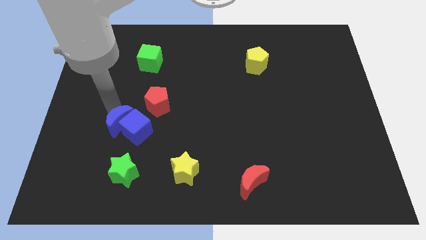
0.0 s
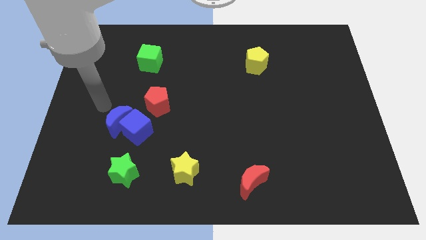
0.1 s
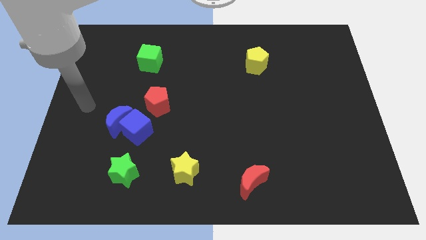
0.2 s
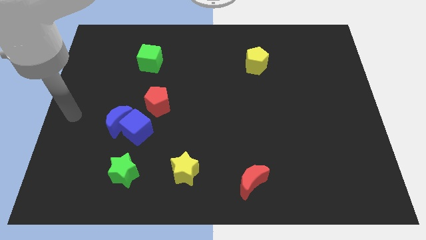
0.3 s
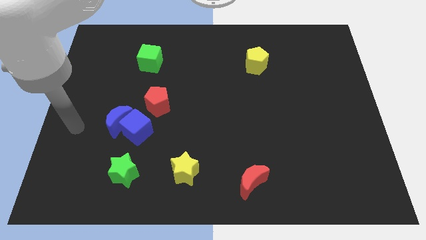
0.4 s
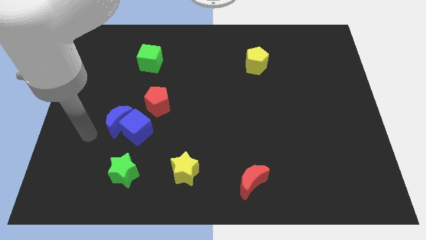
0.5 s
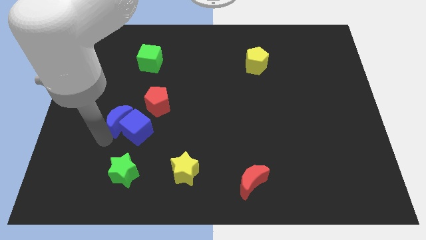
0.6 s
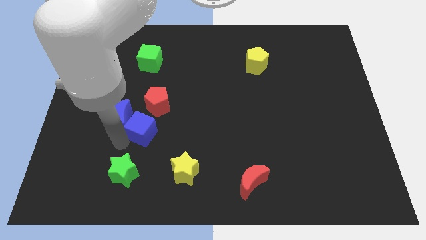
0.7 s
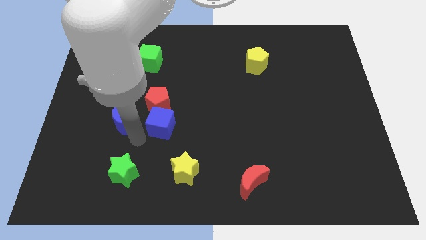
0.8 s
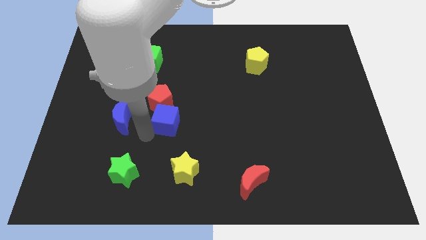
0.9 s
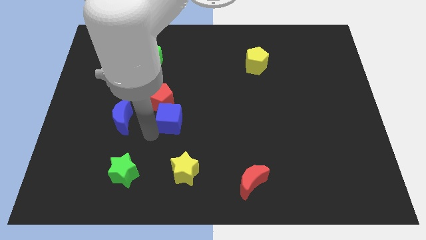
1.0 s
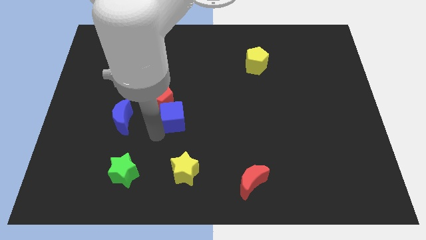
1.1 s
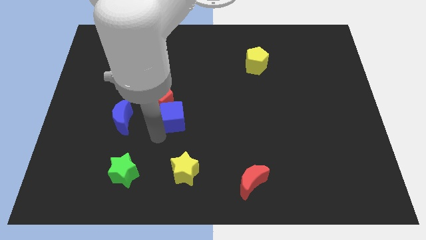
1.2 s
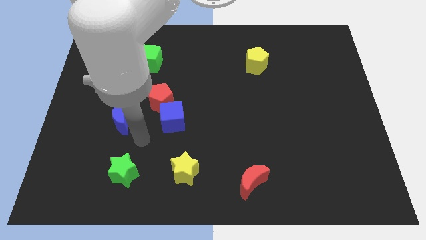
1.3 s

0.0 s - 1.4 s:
move the blue cube into the red pentagon

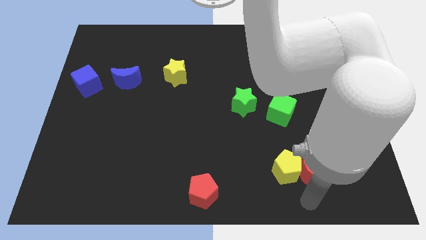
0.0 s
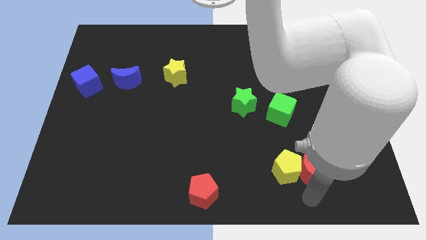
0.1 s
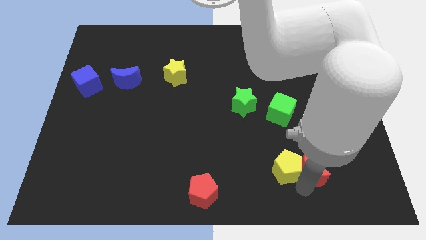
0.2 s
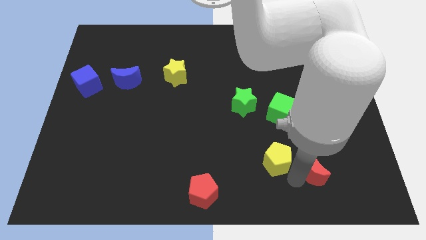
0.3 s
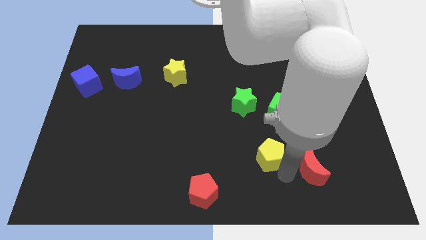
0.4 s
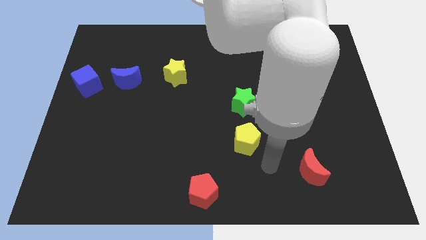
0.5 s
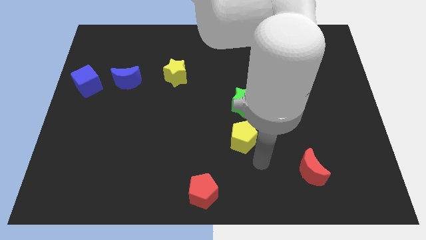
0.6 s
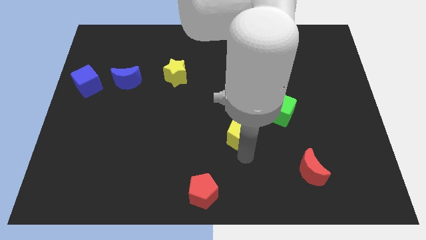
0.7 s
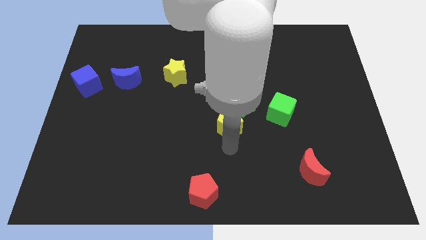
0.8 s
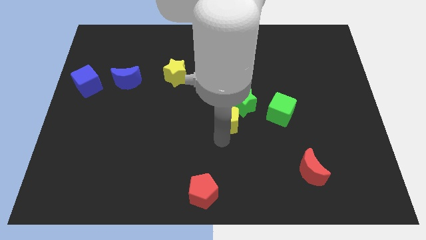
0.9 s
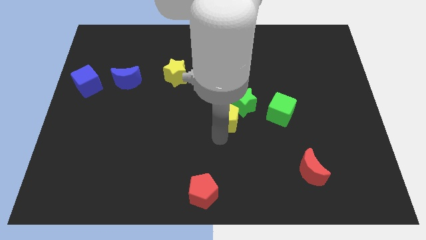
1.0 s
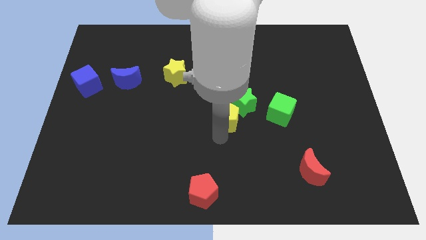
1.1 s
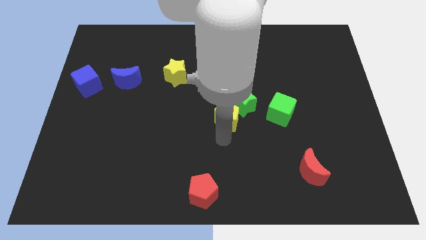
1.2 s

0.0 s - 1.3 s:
separate the yellow pentagon from the red moon

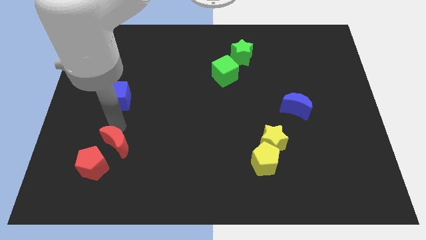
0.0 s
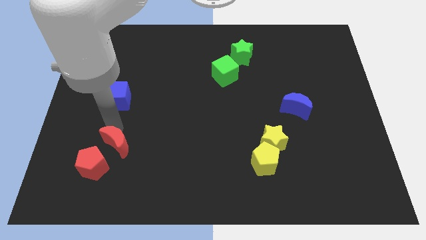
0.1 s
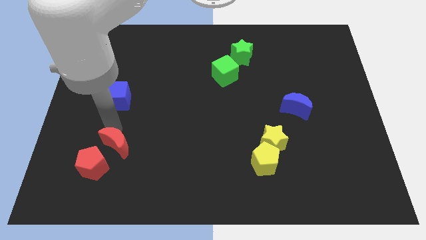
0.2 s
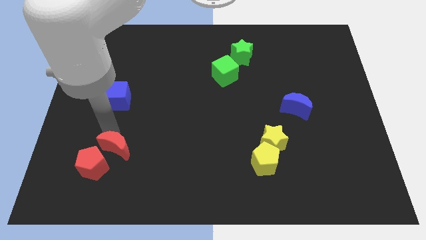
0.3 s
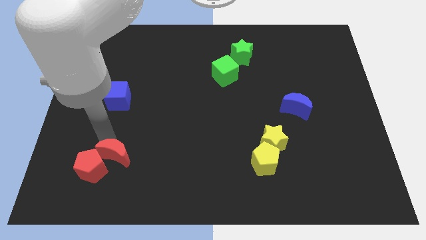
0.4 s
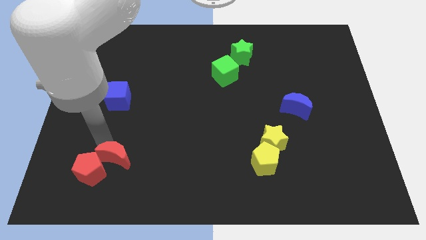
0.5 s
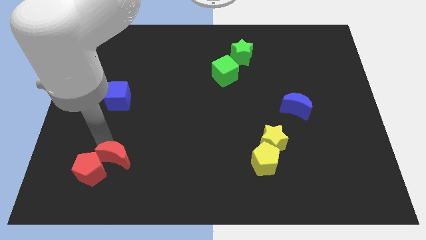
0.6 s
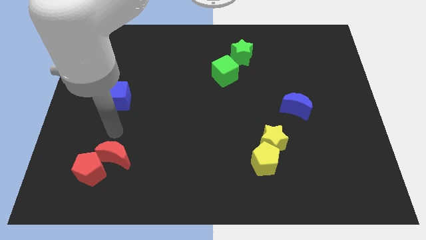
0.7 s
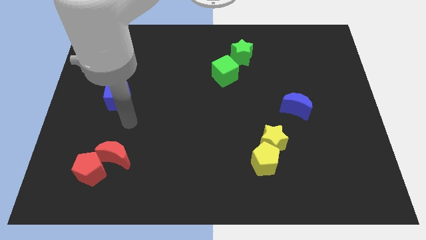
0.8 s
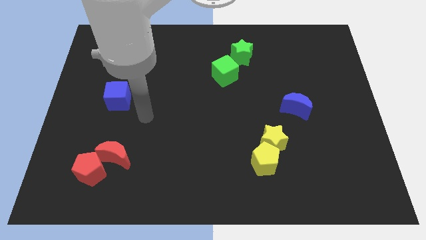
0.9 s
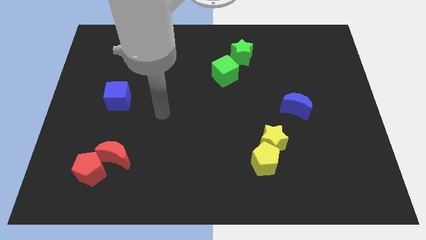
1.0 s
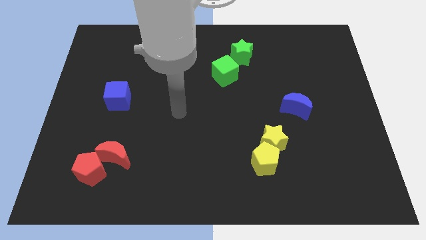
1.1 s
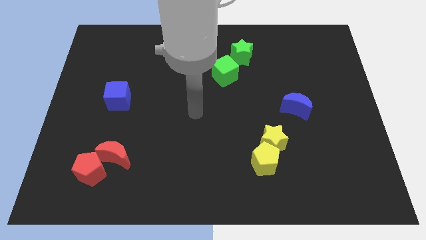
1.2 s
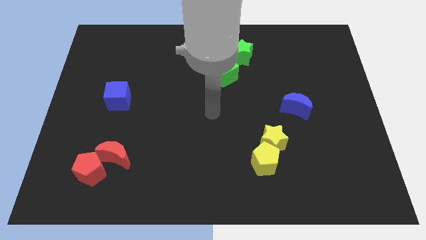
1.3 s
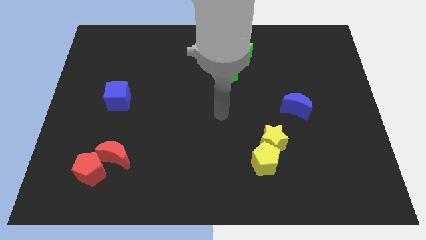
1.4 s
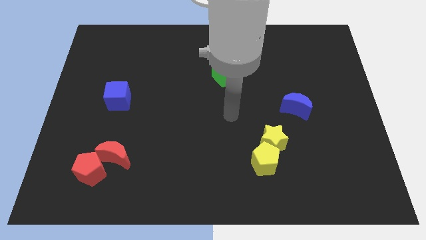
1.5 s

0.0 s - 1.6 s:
put the red moon into the red pentagon

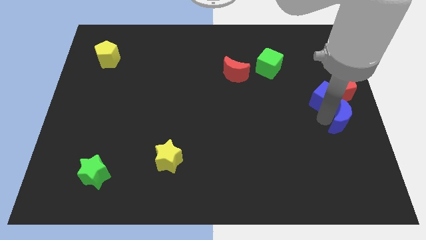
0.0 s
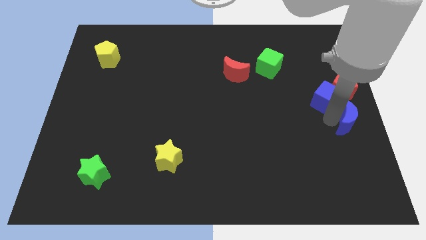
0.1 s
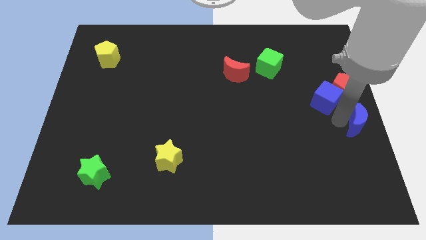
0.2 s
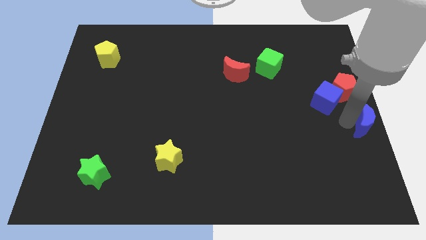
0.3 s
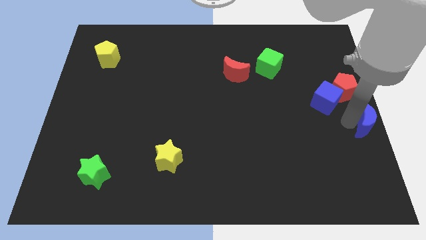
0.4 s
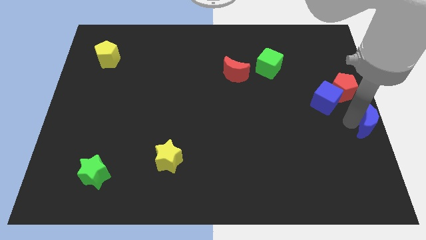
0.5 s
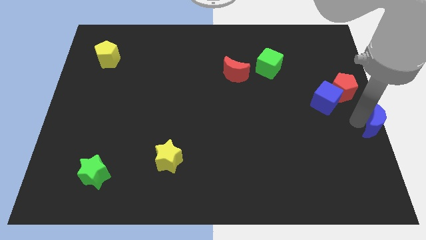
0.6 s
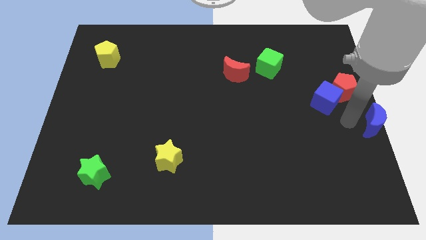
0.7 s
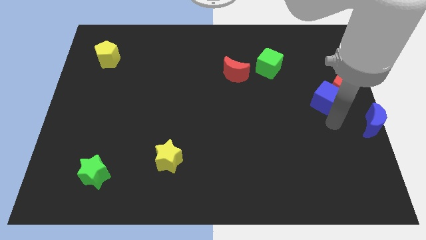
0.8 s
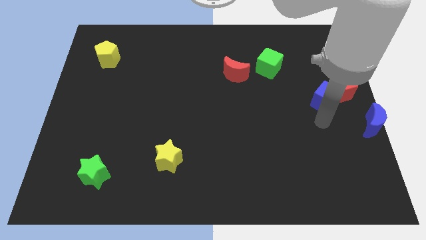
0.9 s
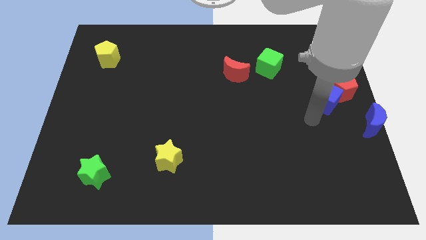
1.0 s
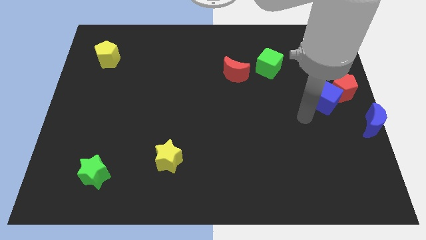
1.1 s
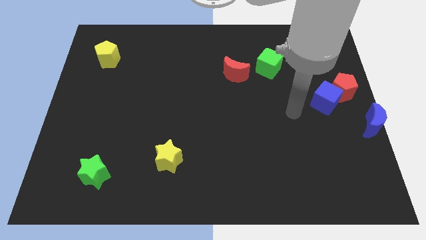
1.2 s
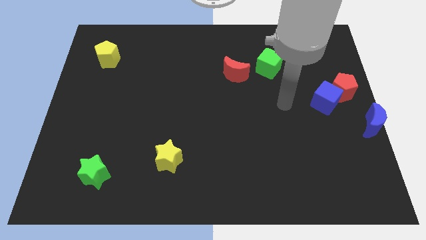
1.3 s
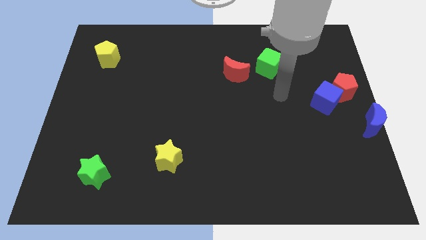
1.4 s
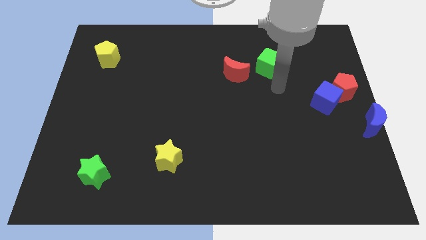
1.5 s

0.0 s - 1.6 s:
move the blue moon away from the blue cube

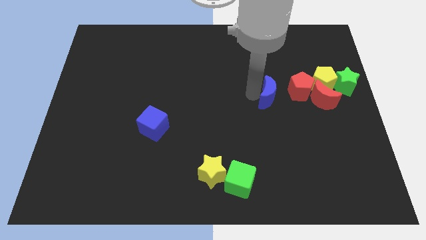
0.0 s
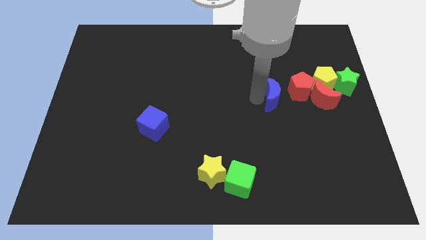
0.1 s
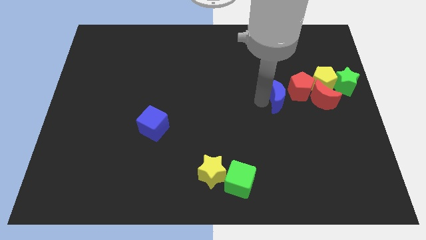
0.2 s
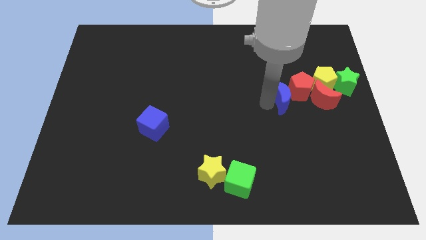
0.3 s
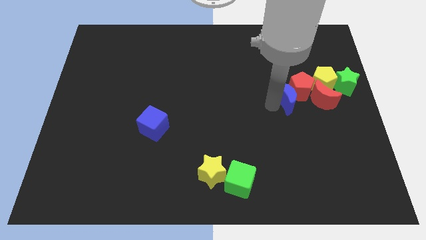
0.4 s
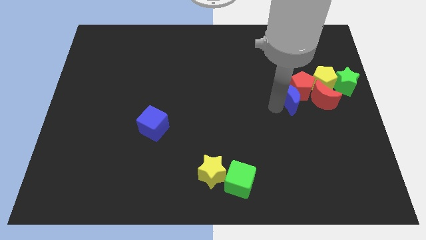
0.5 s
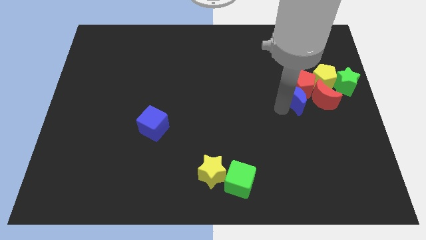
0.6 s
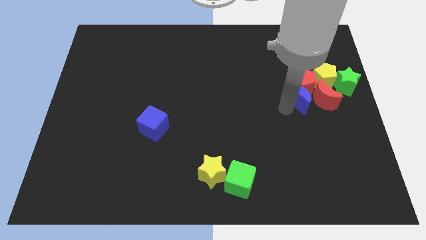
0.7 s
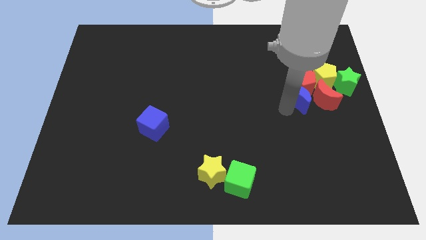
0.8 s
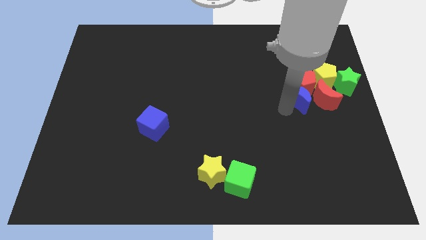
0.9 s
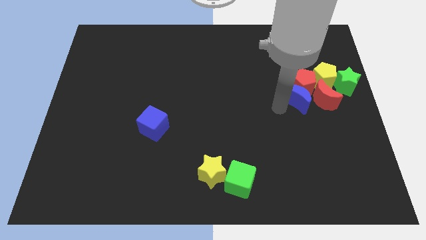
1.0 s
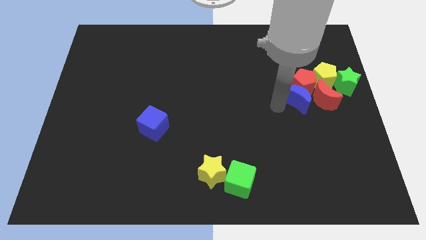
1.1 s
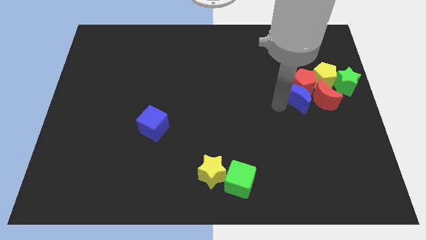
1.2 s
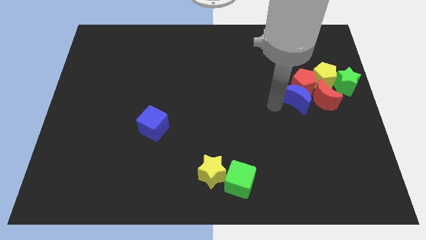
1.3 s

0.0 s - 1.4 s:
place blue crescent below red pentagon

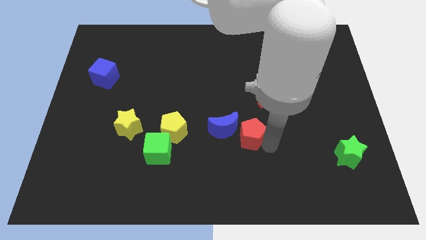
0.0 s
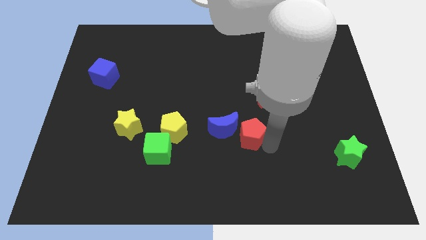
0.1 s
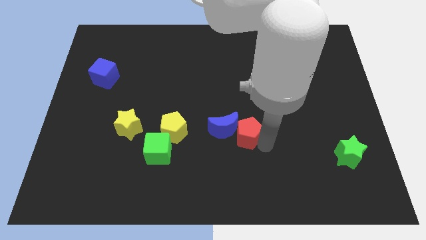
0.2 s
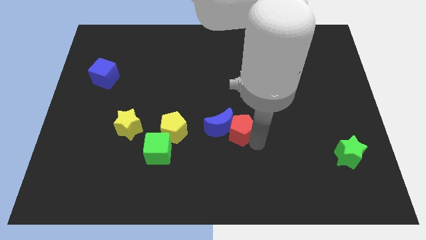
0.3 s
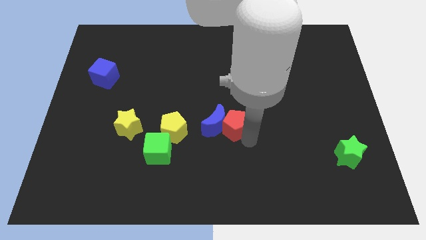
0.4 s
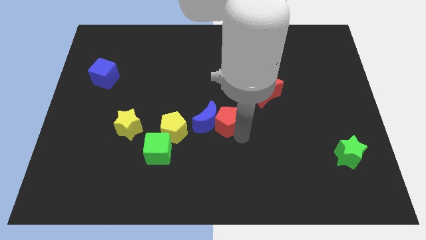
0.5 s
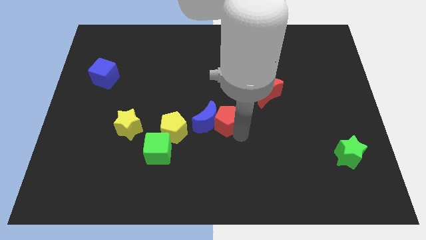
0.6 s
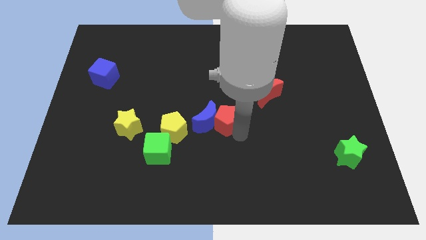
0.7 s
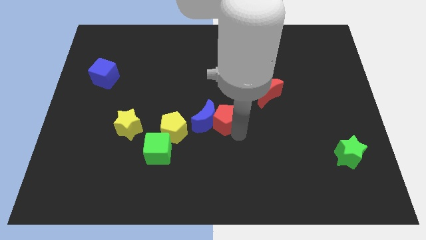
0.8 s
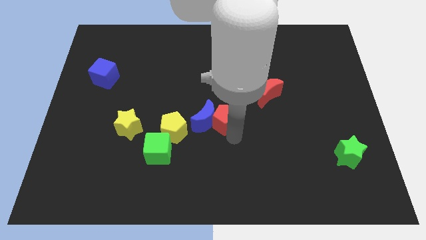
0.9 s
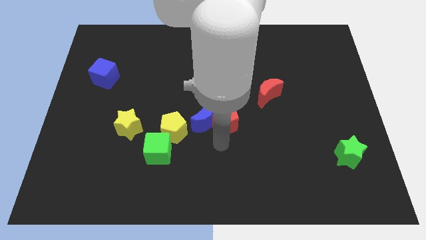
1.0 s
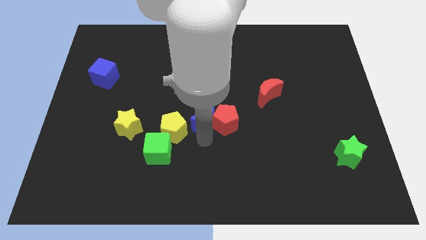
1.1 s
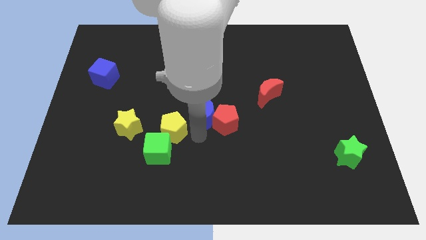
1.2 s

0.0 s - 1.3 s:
push the red pentagon into the blue crescent
